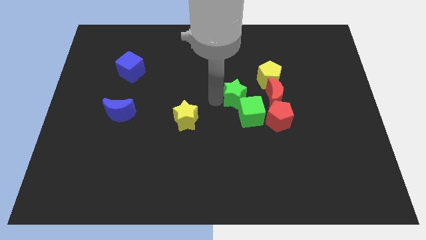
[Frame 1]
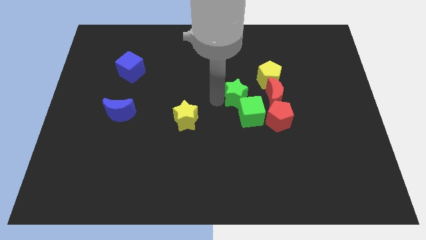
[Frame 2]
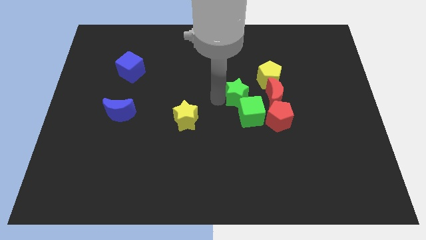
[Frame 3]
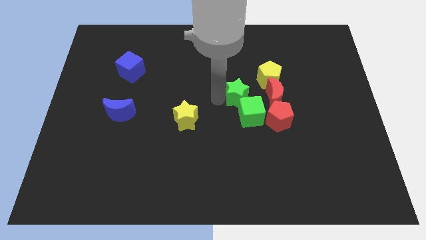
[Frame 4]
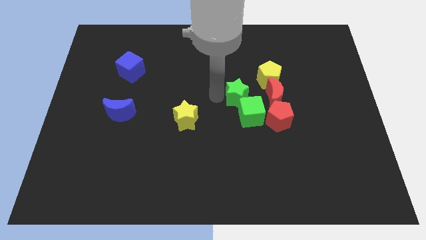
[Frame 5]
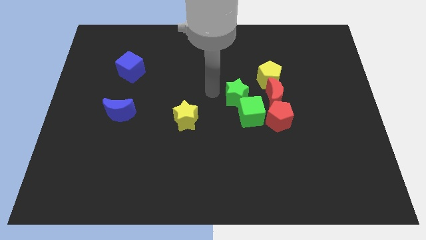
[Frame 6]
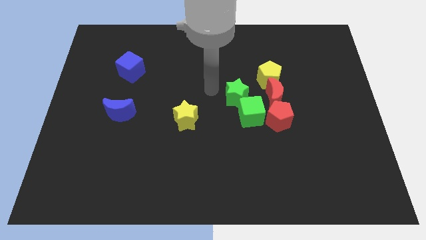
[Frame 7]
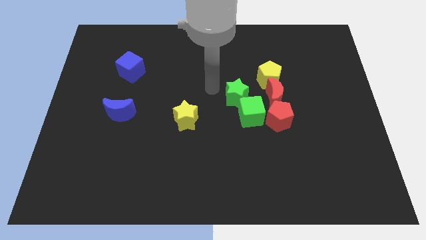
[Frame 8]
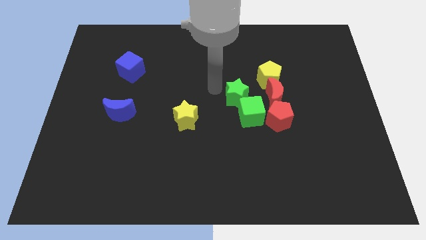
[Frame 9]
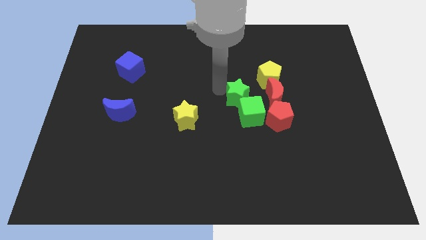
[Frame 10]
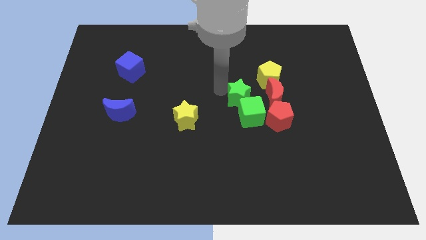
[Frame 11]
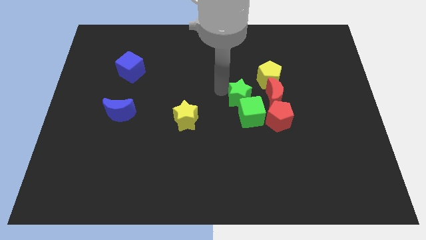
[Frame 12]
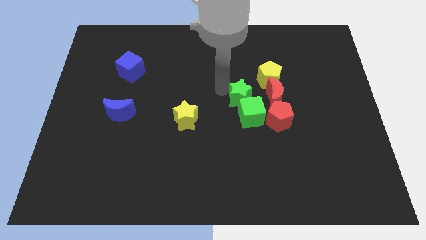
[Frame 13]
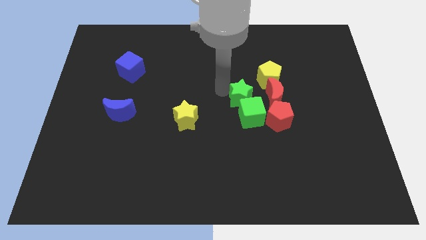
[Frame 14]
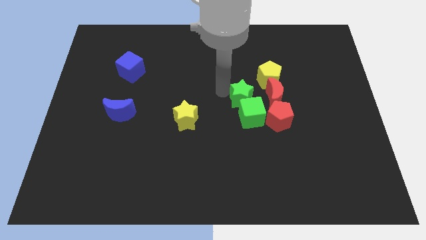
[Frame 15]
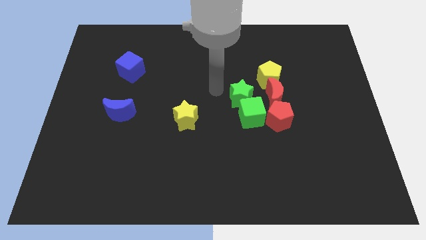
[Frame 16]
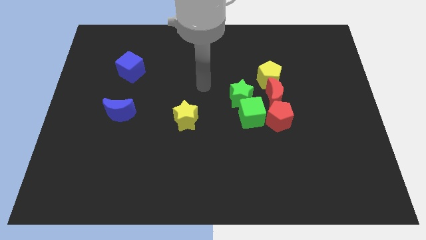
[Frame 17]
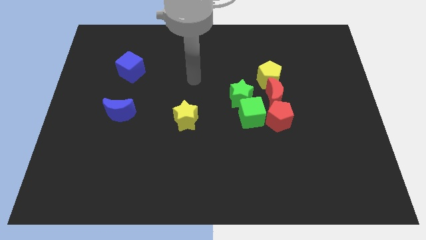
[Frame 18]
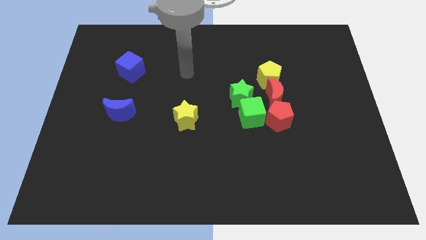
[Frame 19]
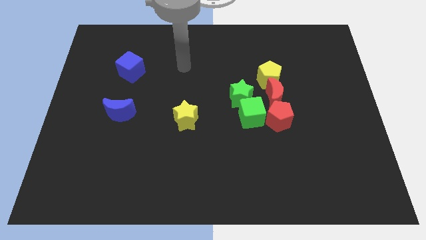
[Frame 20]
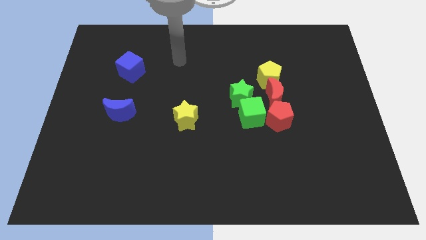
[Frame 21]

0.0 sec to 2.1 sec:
place green star on top of green cube

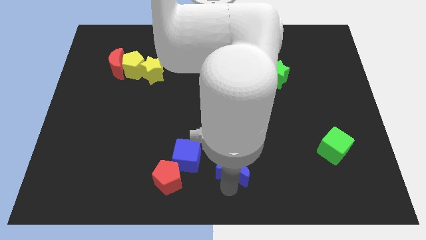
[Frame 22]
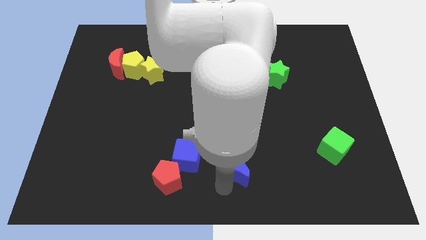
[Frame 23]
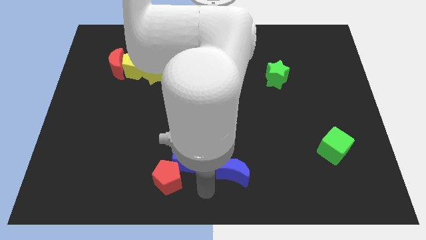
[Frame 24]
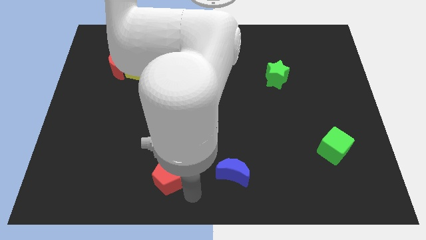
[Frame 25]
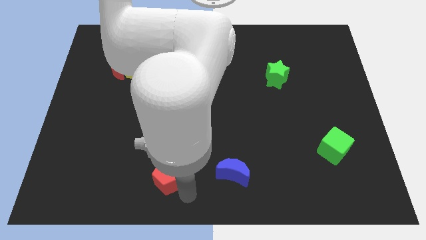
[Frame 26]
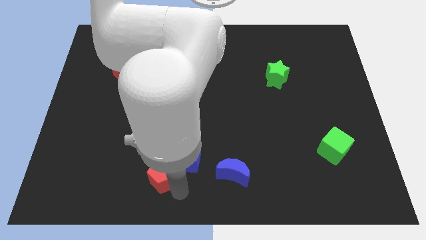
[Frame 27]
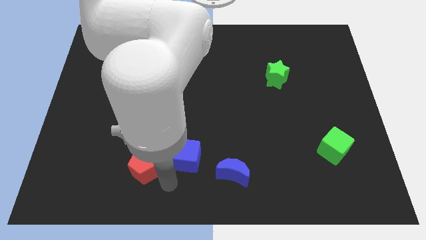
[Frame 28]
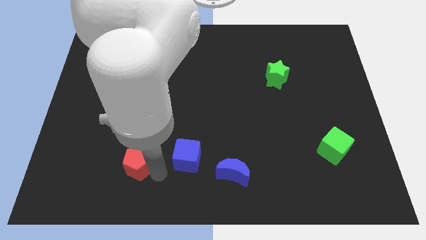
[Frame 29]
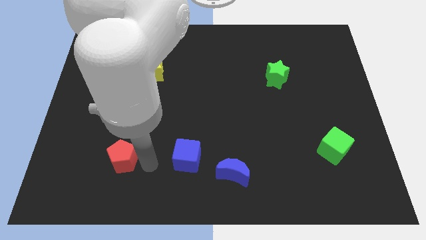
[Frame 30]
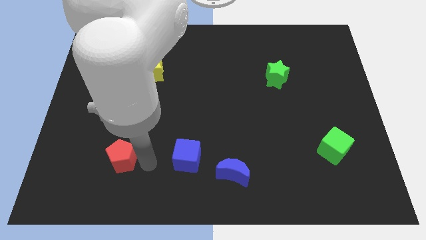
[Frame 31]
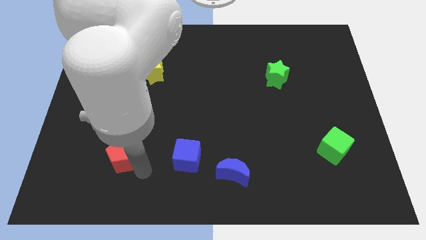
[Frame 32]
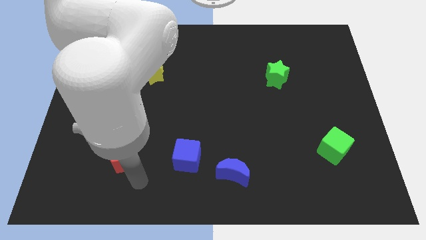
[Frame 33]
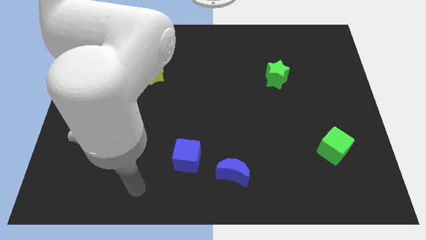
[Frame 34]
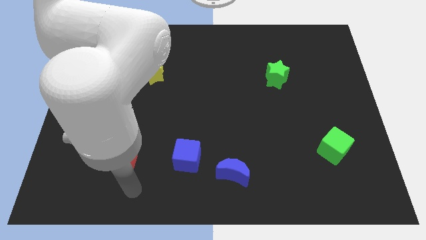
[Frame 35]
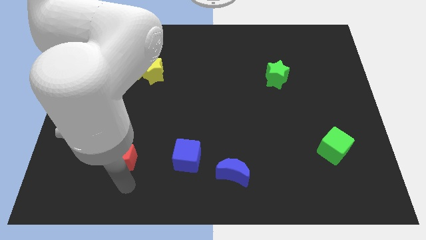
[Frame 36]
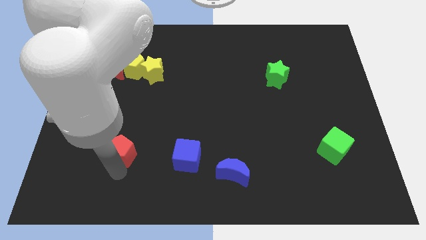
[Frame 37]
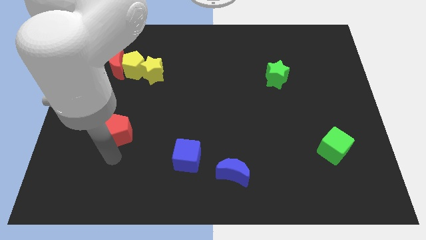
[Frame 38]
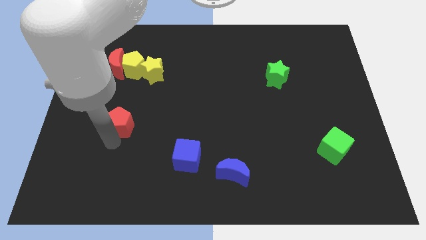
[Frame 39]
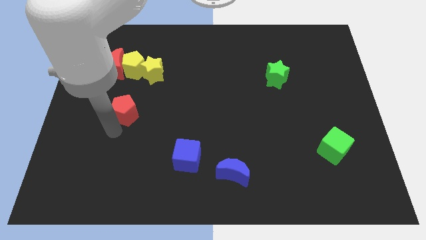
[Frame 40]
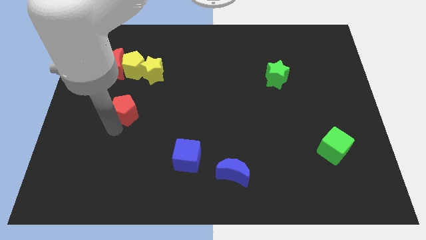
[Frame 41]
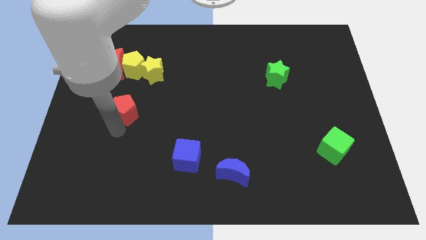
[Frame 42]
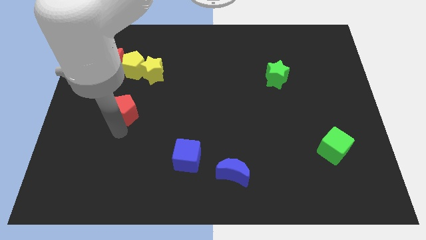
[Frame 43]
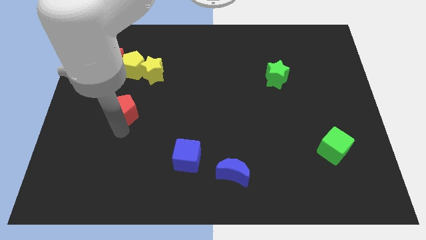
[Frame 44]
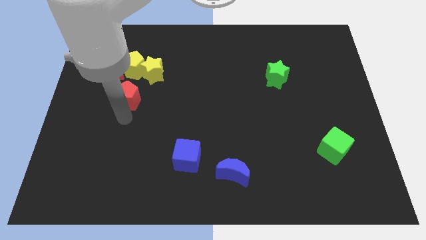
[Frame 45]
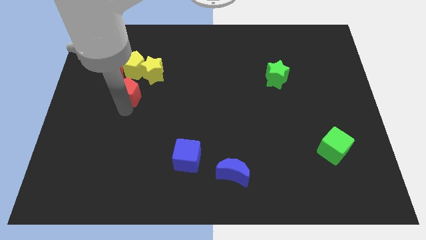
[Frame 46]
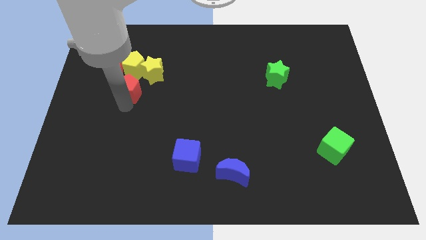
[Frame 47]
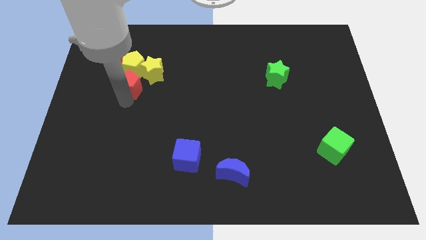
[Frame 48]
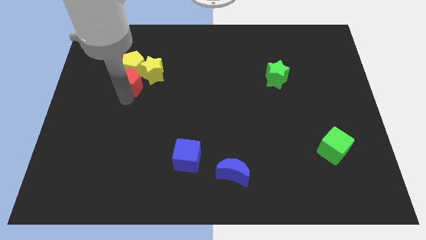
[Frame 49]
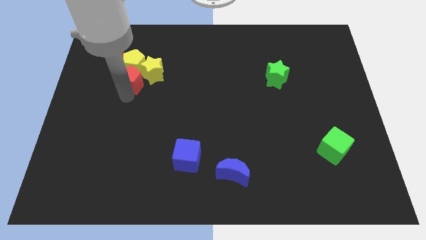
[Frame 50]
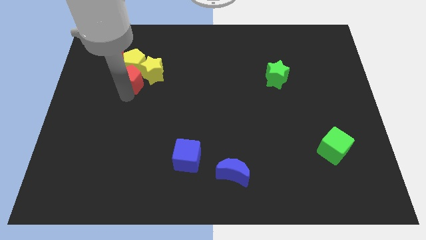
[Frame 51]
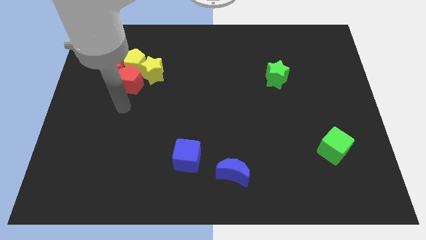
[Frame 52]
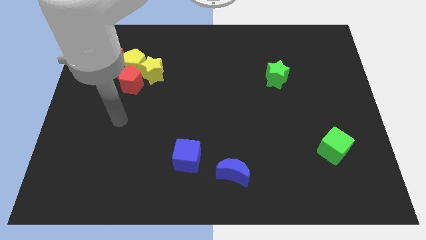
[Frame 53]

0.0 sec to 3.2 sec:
push the red pentagon into yellow pentagon

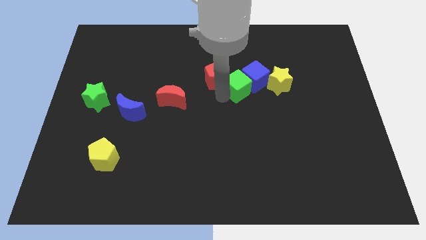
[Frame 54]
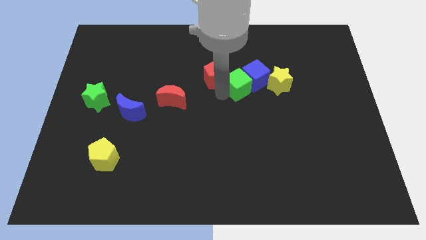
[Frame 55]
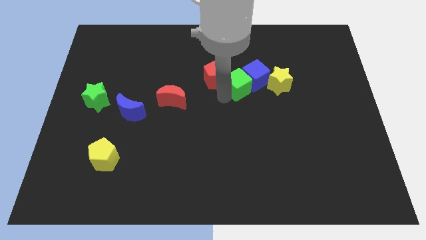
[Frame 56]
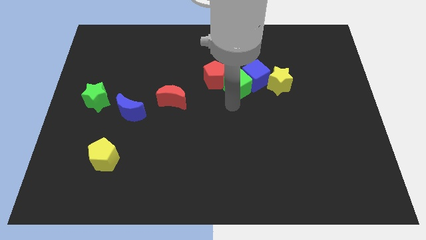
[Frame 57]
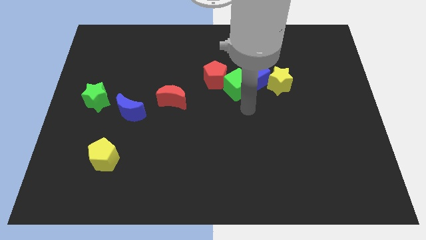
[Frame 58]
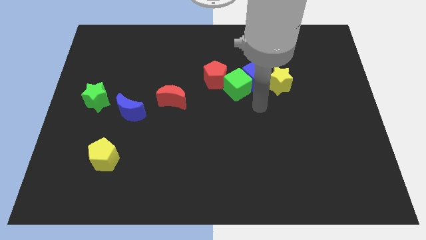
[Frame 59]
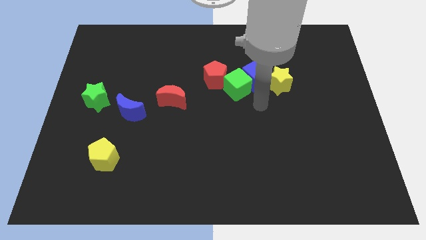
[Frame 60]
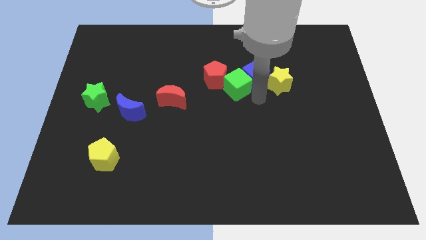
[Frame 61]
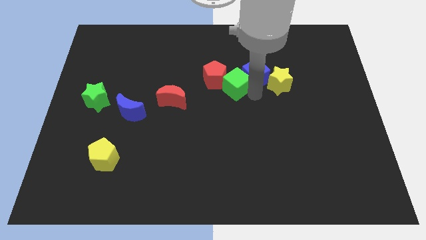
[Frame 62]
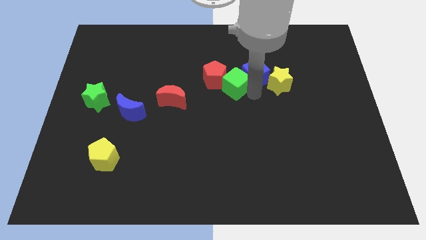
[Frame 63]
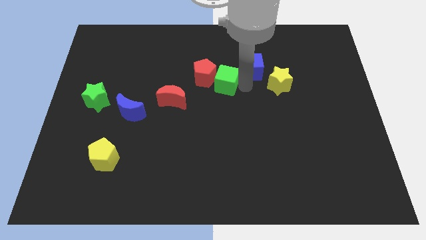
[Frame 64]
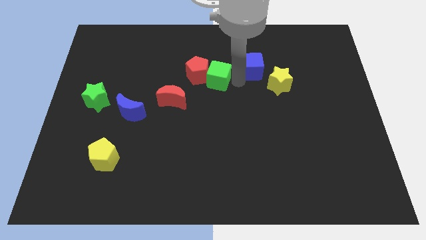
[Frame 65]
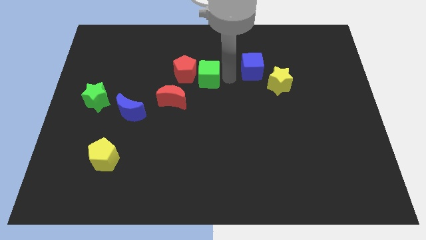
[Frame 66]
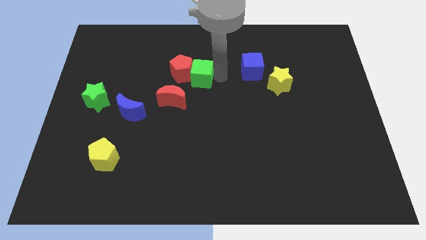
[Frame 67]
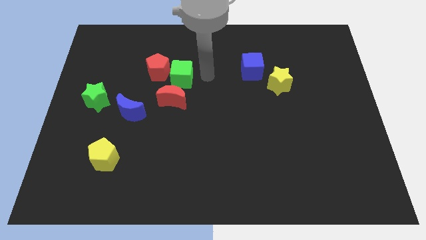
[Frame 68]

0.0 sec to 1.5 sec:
separate the green cube and red pentagon from the blue cube

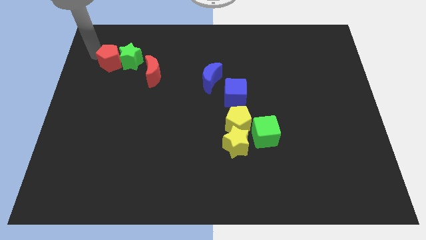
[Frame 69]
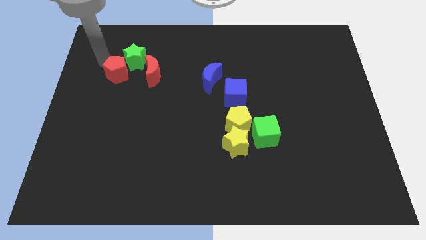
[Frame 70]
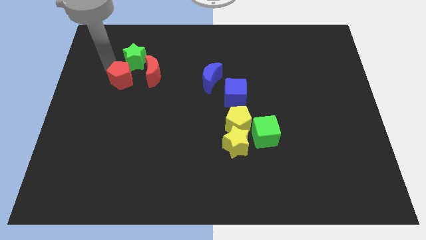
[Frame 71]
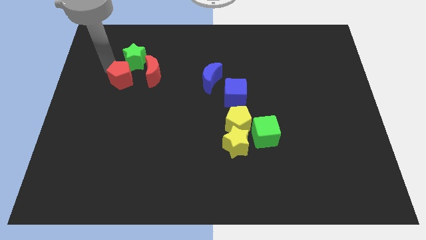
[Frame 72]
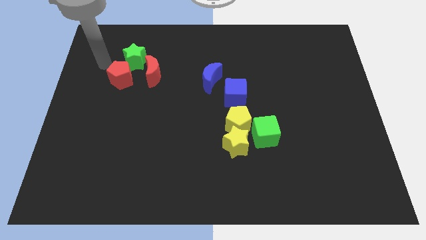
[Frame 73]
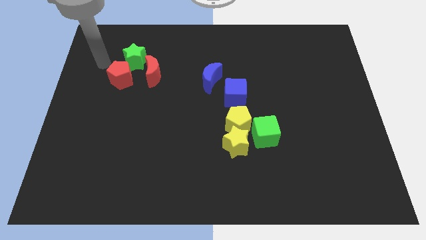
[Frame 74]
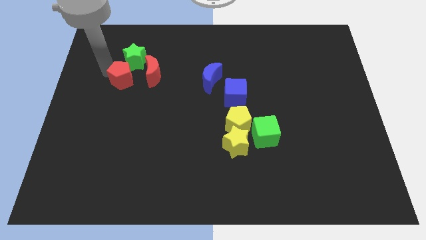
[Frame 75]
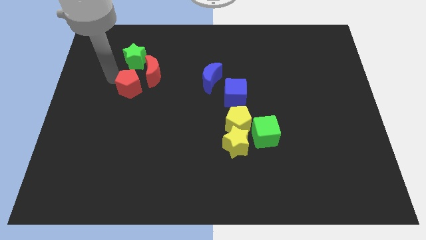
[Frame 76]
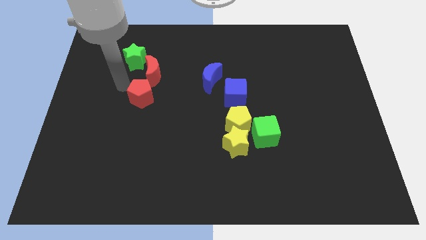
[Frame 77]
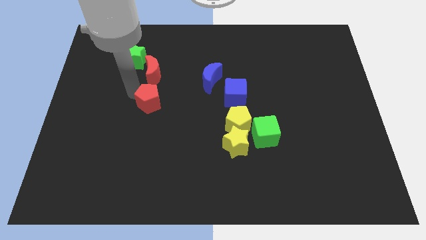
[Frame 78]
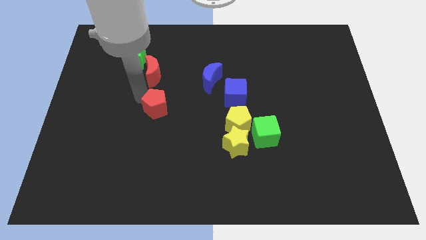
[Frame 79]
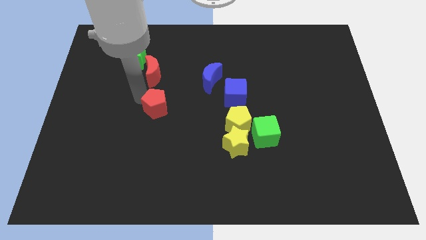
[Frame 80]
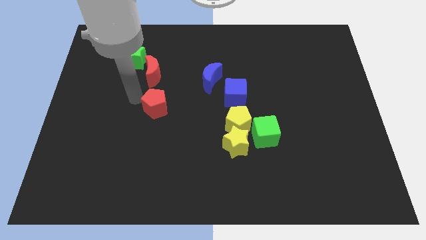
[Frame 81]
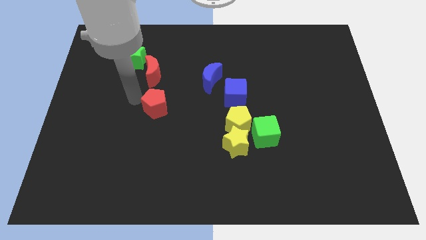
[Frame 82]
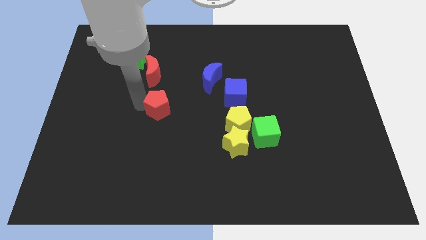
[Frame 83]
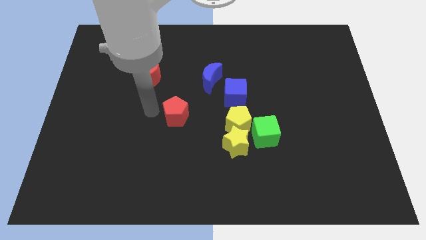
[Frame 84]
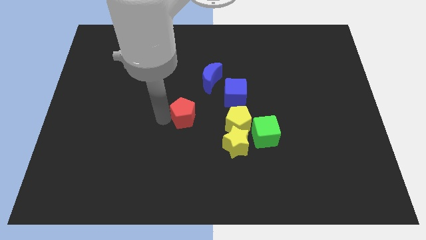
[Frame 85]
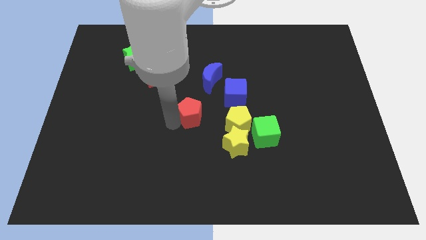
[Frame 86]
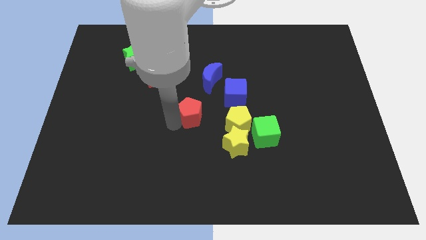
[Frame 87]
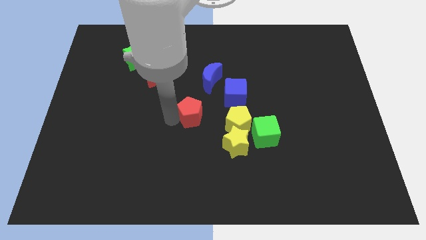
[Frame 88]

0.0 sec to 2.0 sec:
move the red pentagon to the center of the board

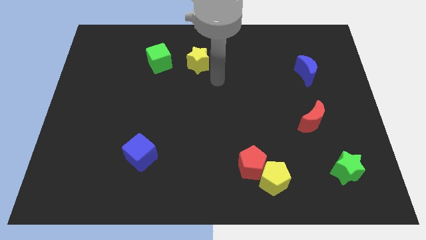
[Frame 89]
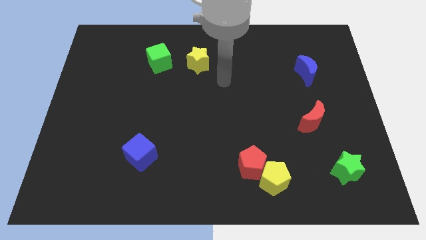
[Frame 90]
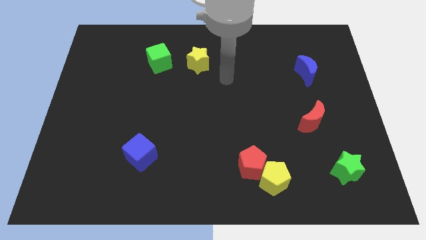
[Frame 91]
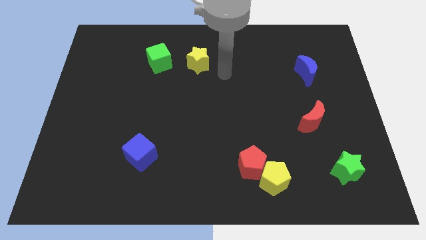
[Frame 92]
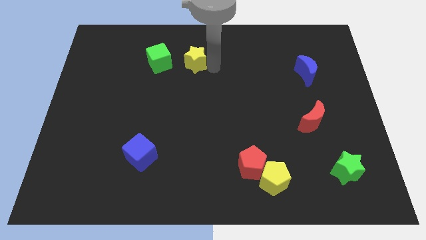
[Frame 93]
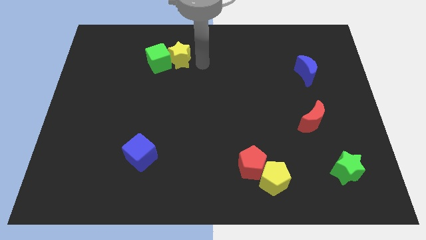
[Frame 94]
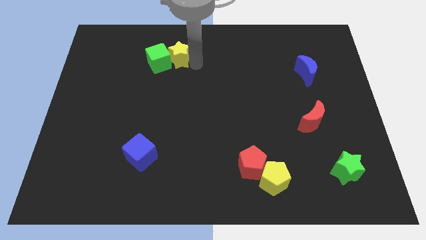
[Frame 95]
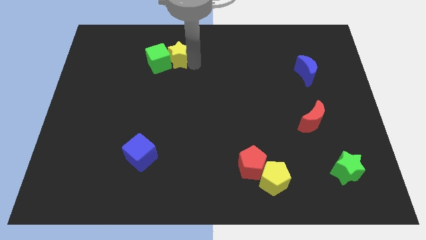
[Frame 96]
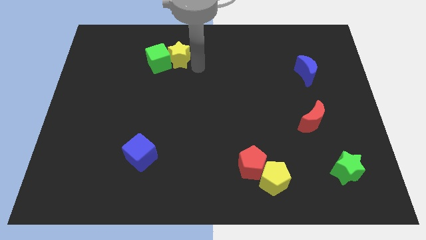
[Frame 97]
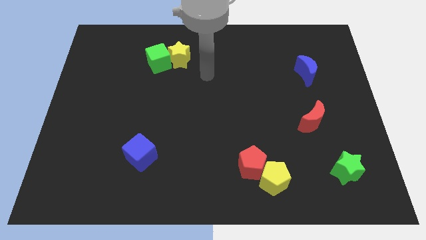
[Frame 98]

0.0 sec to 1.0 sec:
move the yellow star close to the green cube
